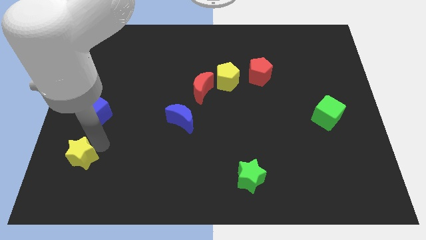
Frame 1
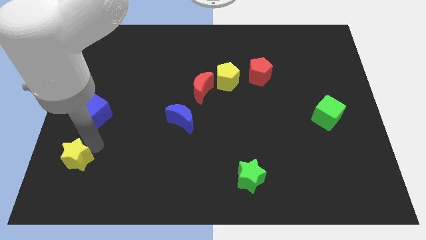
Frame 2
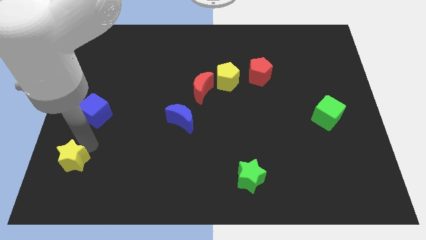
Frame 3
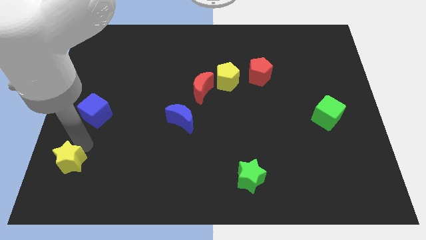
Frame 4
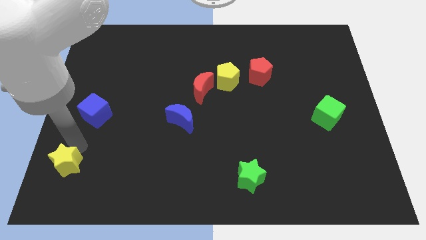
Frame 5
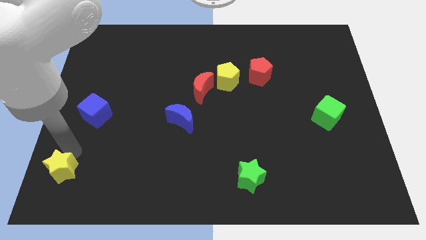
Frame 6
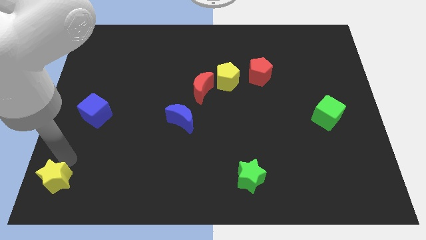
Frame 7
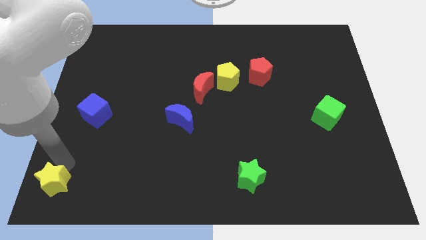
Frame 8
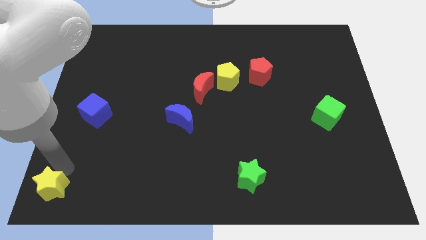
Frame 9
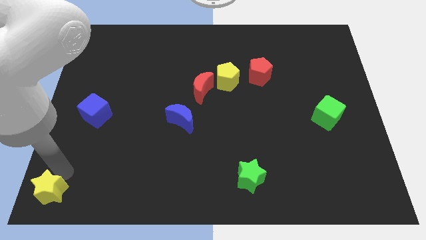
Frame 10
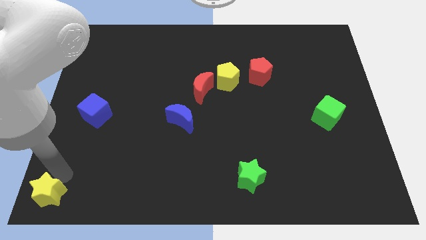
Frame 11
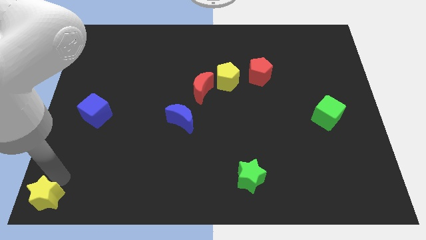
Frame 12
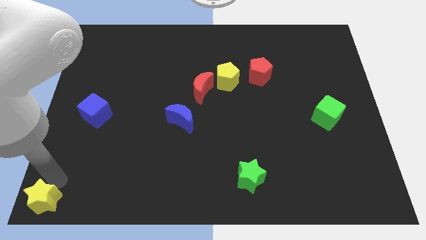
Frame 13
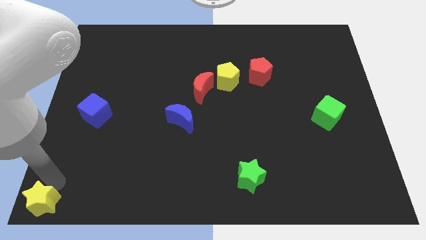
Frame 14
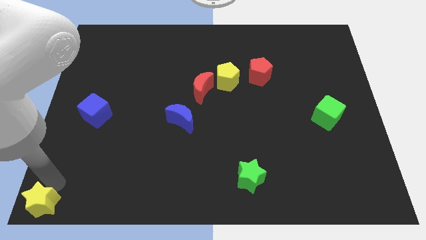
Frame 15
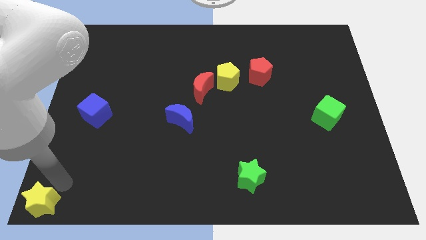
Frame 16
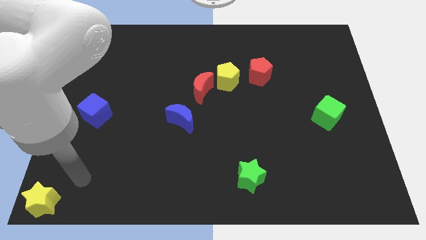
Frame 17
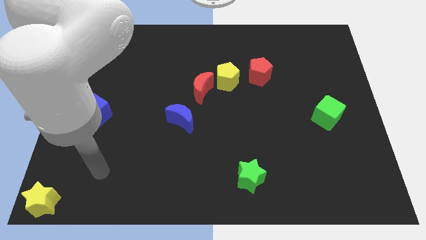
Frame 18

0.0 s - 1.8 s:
move the yellow star towards the bottom left corner of the board

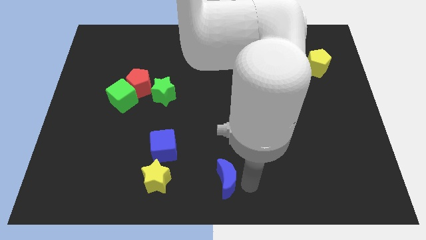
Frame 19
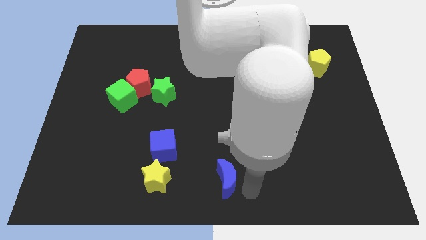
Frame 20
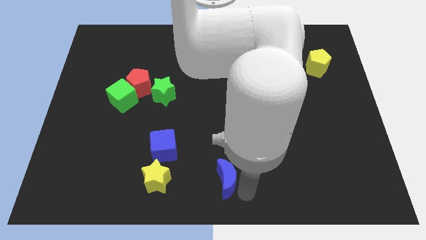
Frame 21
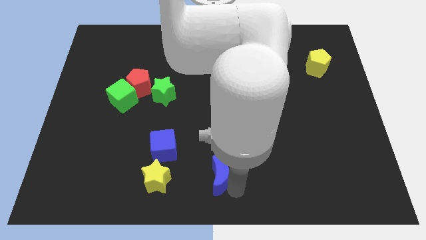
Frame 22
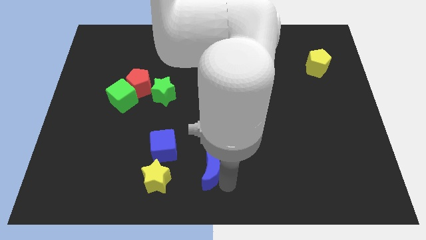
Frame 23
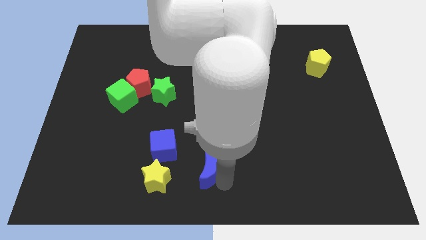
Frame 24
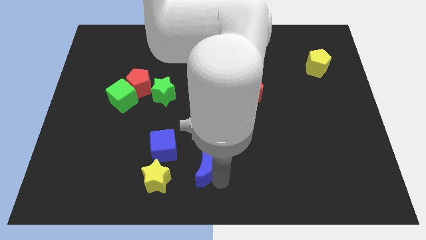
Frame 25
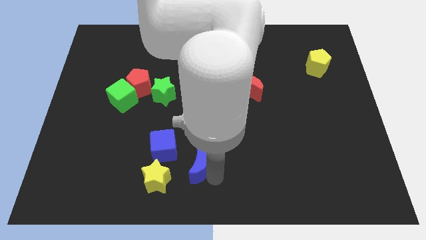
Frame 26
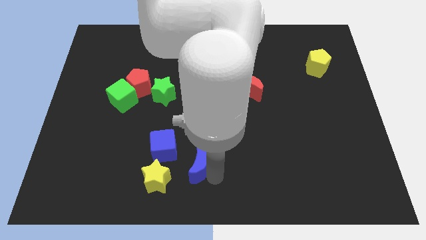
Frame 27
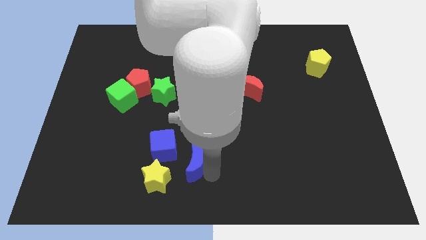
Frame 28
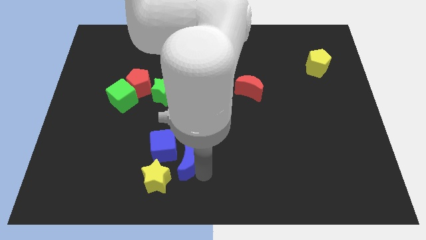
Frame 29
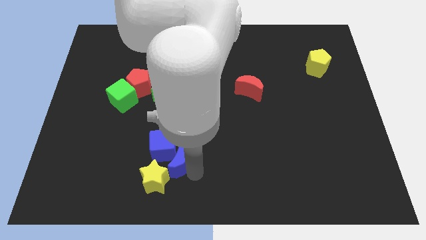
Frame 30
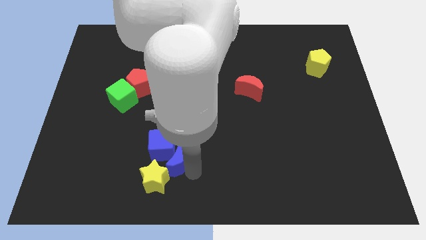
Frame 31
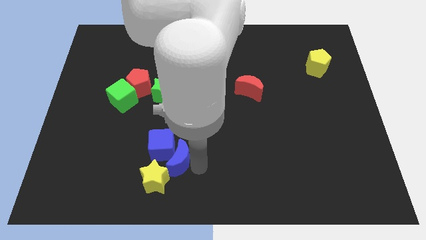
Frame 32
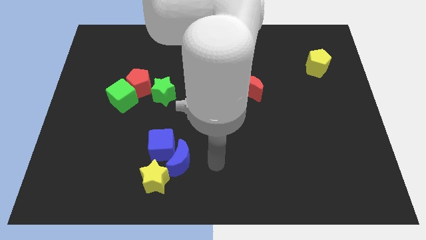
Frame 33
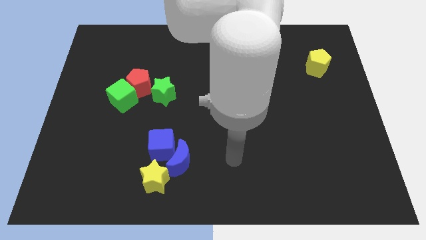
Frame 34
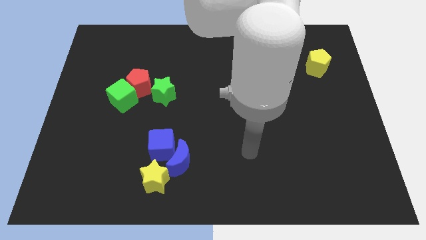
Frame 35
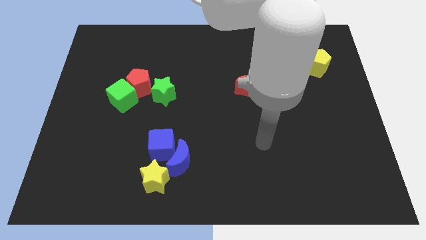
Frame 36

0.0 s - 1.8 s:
push the blue crescent into the blue cube

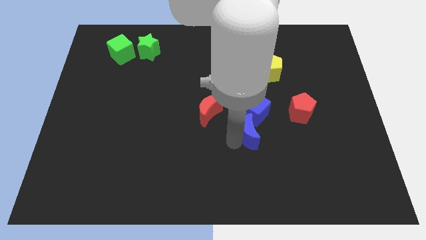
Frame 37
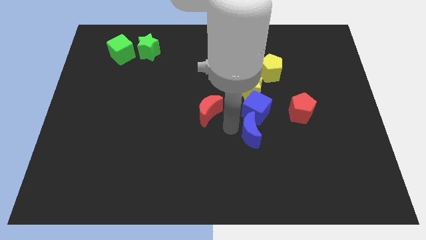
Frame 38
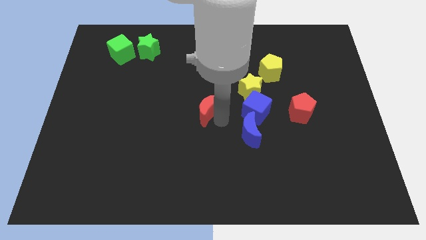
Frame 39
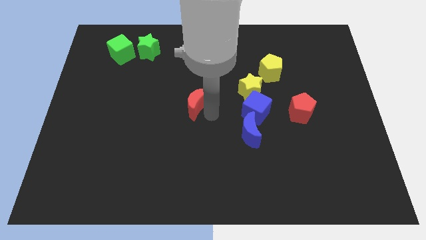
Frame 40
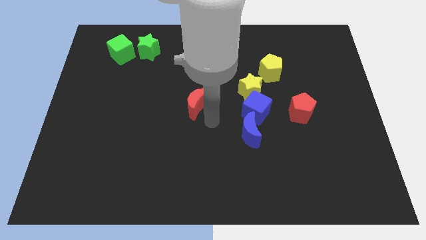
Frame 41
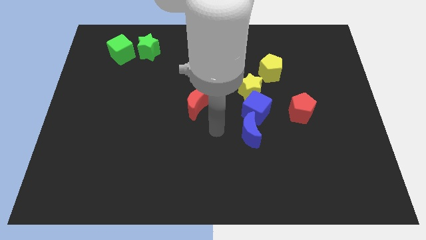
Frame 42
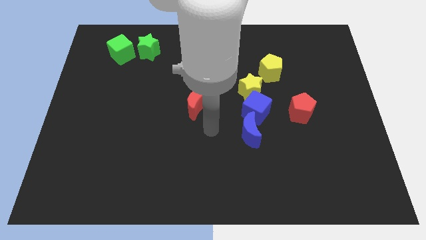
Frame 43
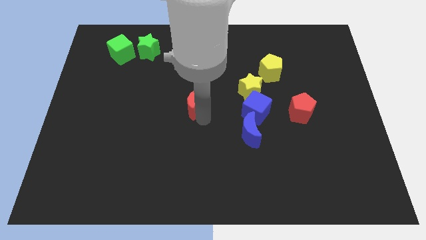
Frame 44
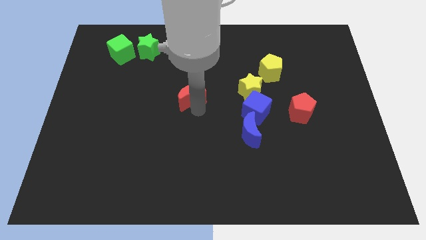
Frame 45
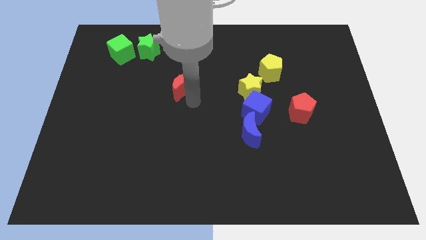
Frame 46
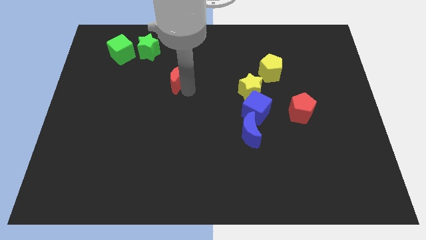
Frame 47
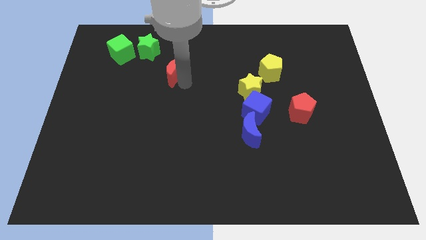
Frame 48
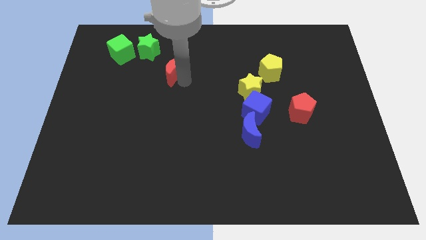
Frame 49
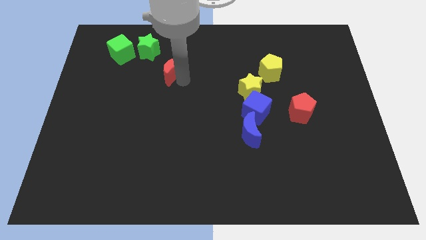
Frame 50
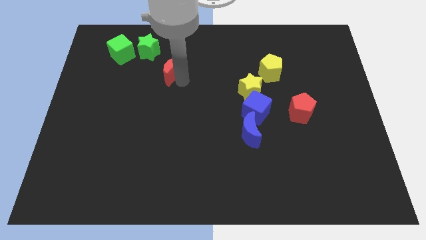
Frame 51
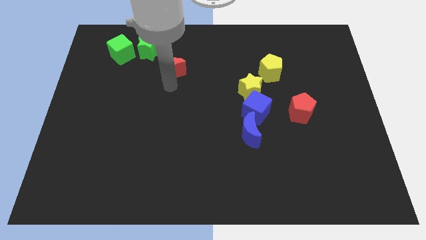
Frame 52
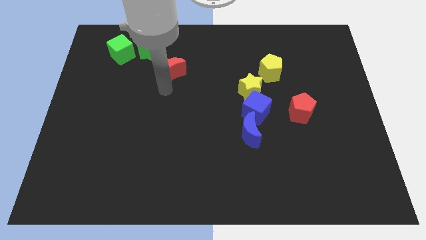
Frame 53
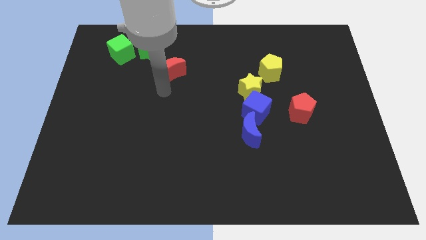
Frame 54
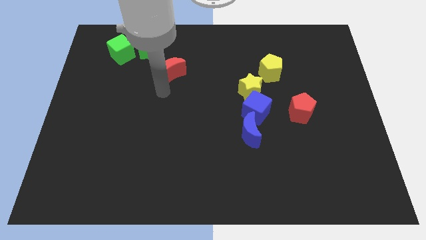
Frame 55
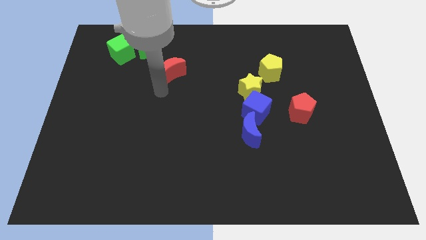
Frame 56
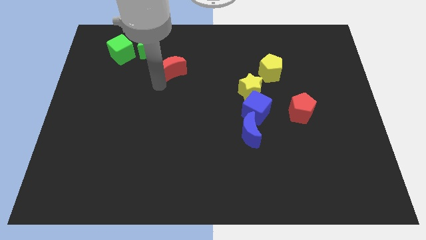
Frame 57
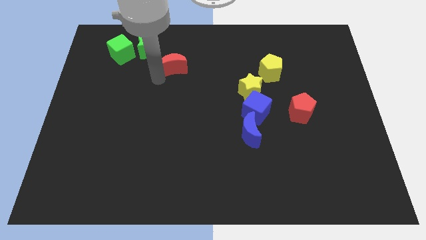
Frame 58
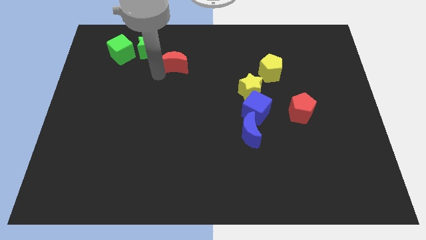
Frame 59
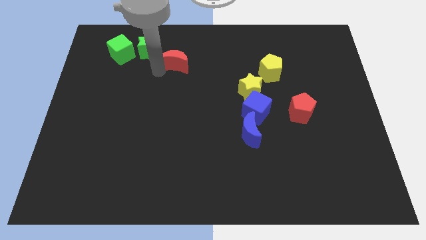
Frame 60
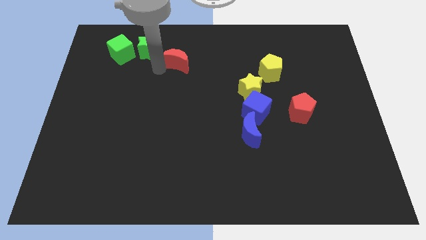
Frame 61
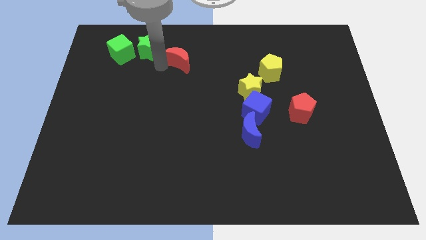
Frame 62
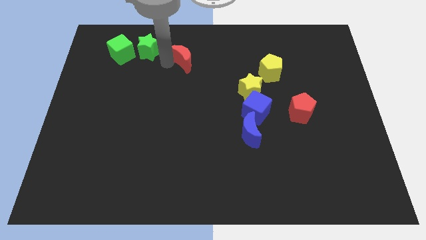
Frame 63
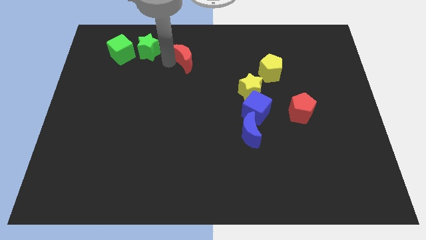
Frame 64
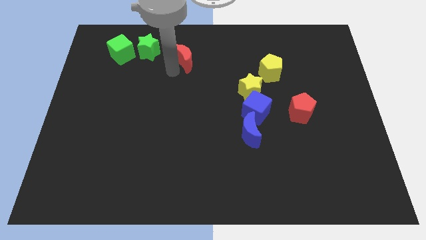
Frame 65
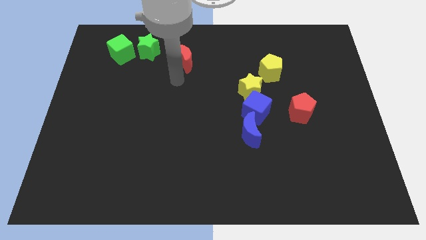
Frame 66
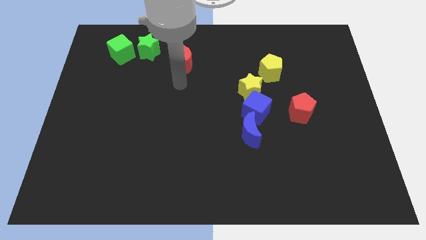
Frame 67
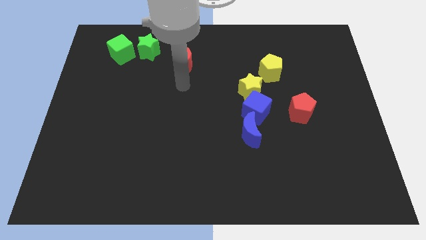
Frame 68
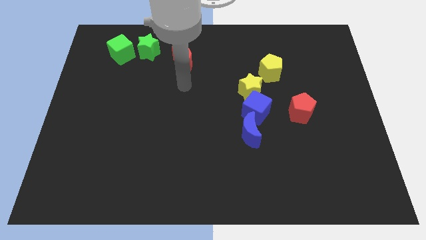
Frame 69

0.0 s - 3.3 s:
push the red moon upward

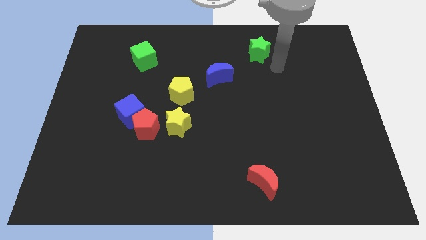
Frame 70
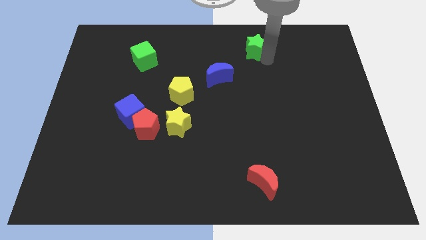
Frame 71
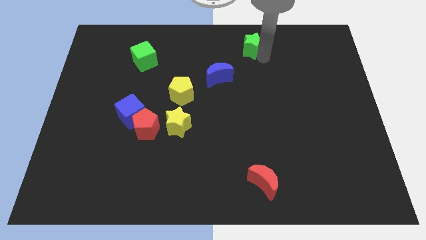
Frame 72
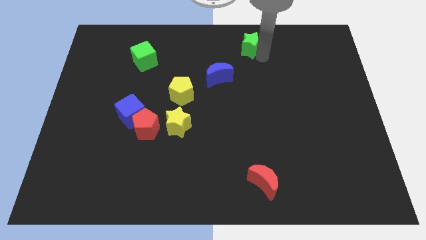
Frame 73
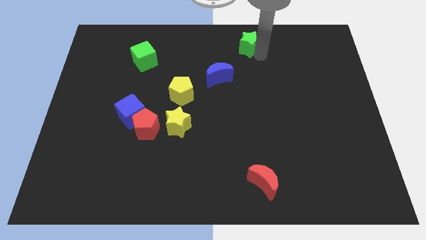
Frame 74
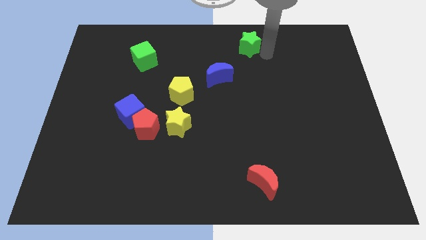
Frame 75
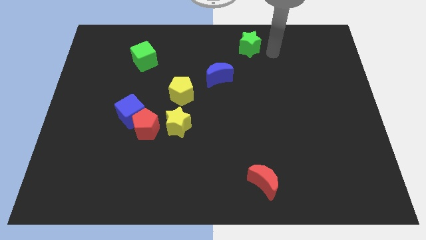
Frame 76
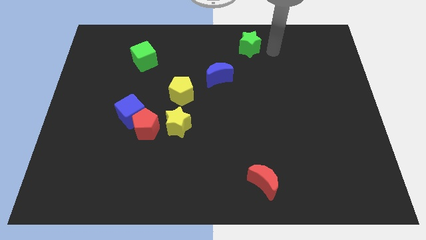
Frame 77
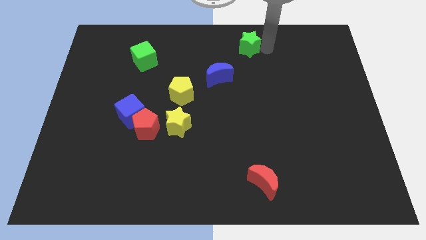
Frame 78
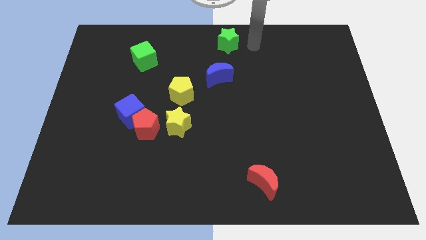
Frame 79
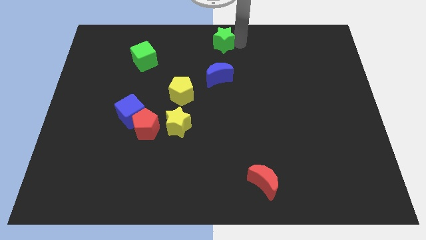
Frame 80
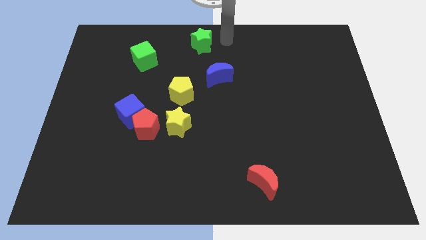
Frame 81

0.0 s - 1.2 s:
place the green star vertically above the blue moon

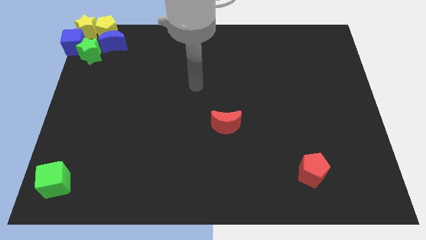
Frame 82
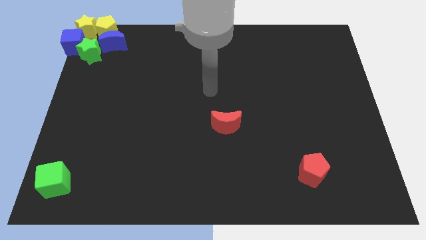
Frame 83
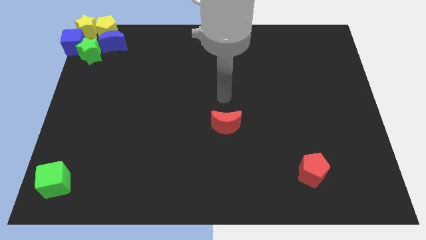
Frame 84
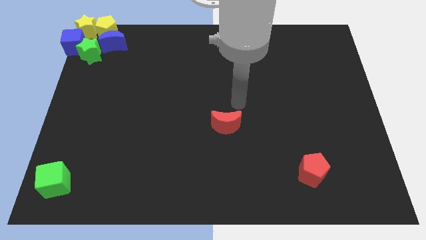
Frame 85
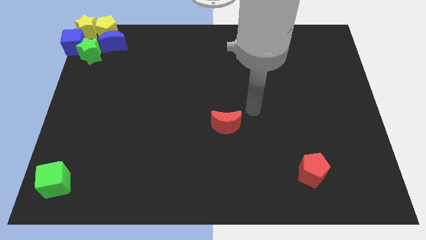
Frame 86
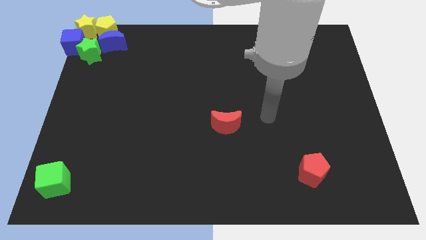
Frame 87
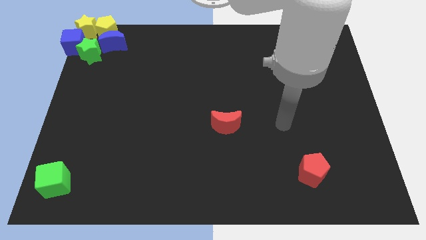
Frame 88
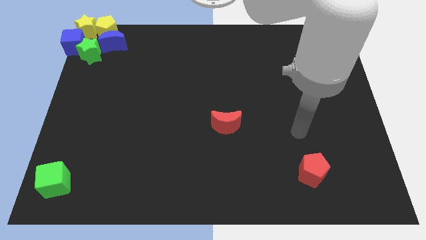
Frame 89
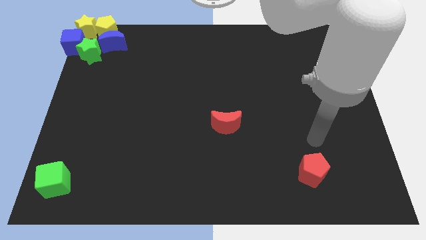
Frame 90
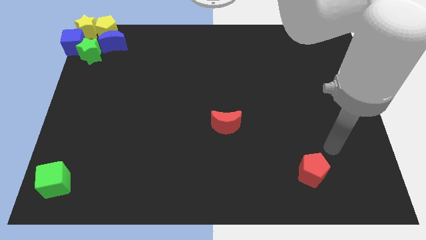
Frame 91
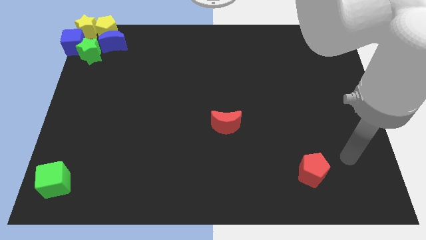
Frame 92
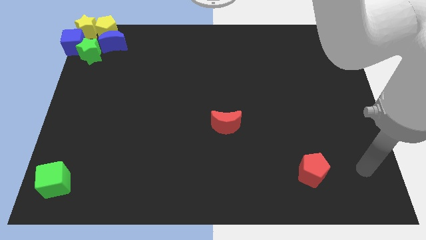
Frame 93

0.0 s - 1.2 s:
move your hand towards the bottom right of the board
